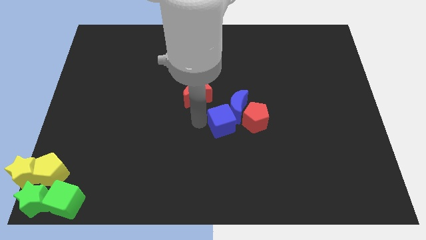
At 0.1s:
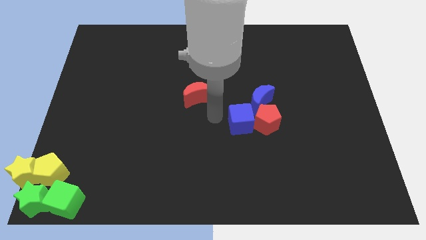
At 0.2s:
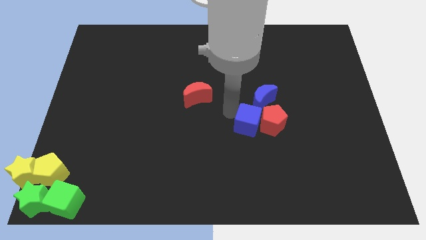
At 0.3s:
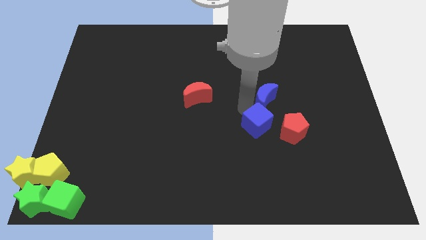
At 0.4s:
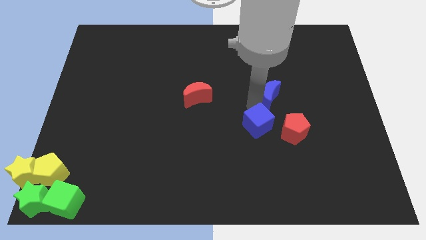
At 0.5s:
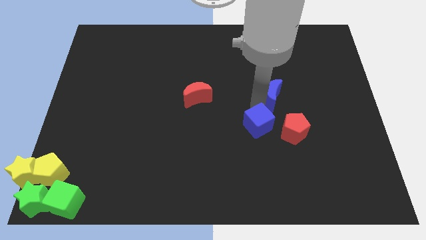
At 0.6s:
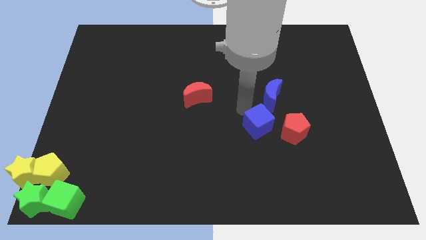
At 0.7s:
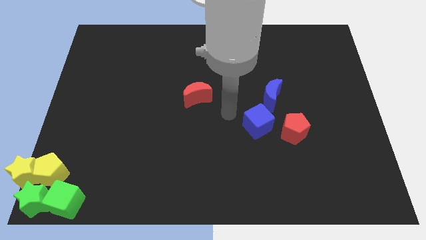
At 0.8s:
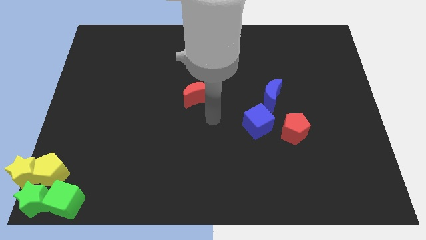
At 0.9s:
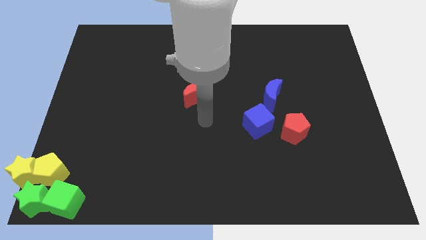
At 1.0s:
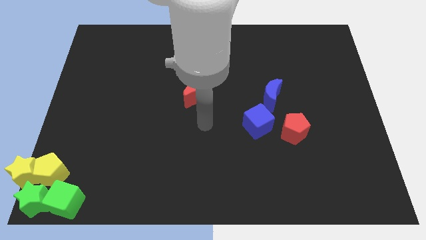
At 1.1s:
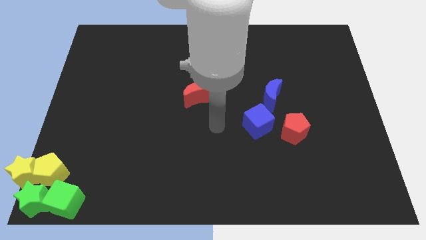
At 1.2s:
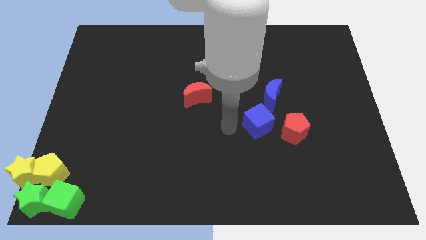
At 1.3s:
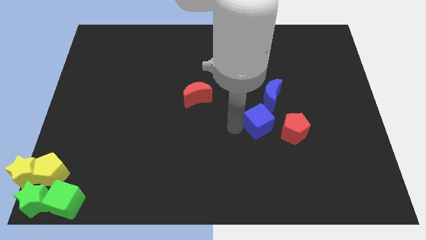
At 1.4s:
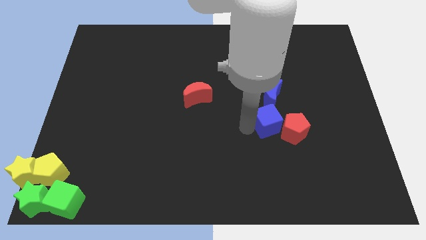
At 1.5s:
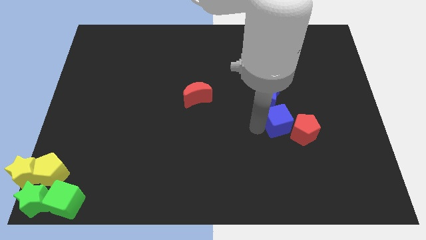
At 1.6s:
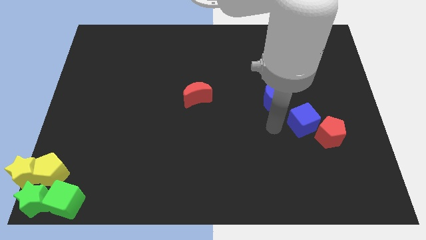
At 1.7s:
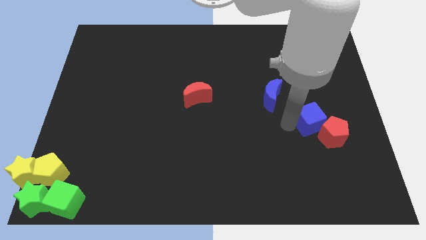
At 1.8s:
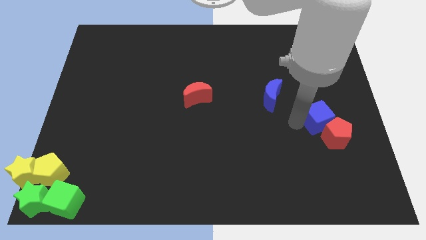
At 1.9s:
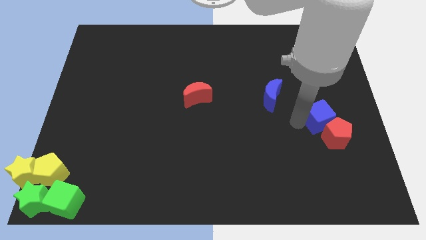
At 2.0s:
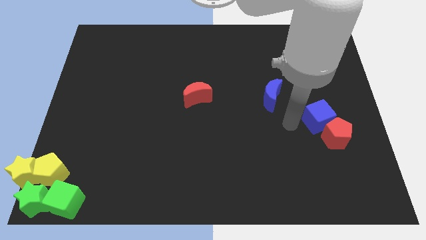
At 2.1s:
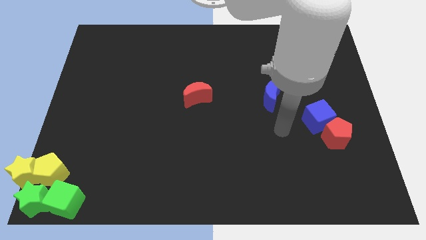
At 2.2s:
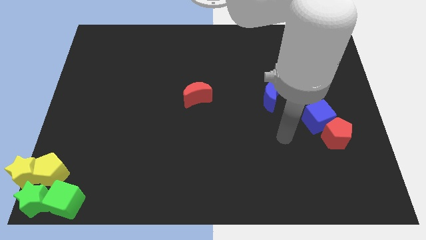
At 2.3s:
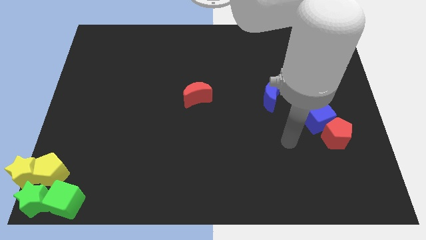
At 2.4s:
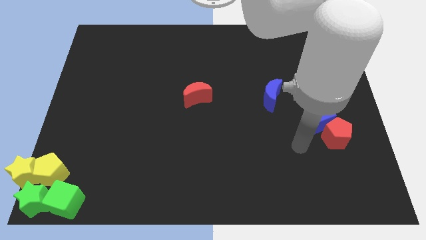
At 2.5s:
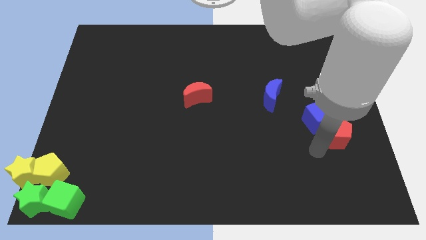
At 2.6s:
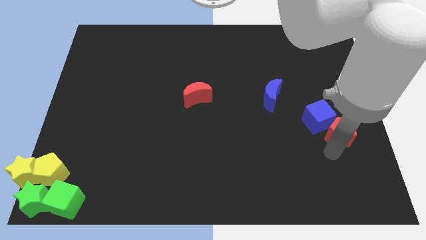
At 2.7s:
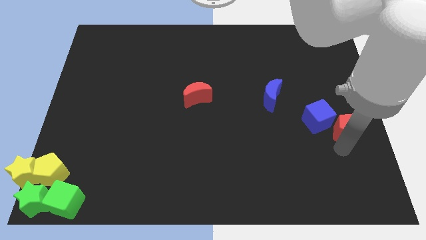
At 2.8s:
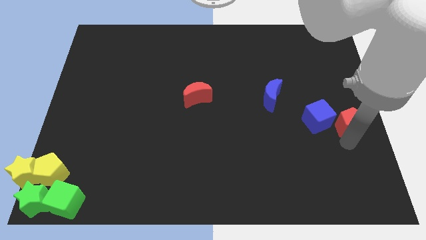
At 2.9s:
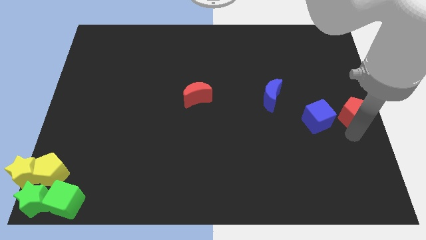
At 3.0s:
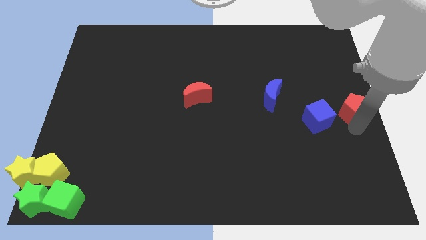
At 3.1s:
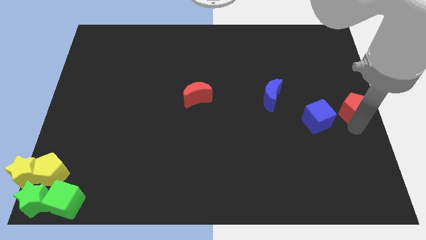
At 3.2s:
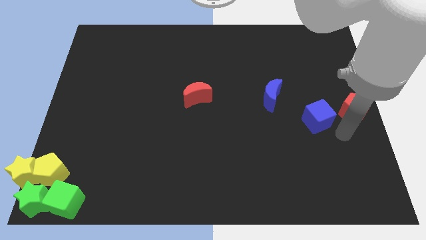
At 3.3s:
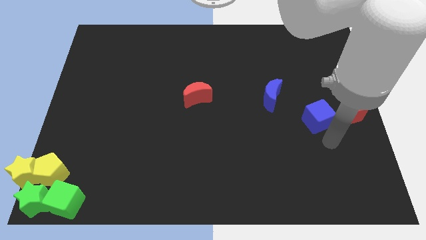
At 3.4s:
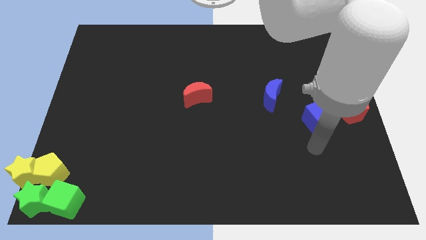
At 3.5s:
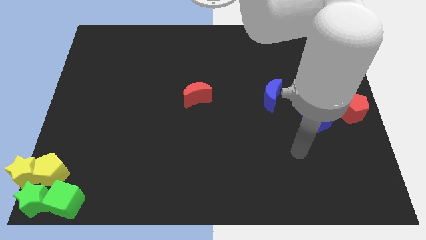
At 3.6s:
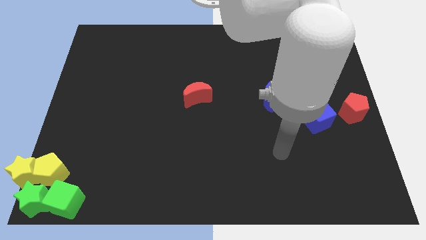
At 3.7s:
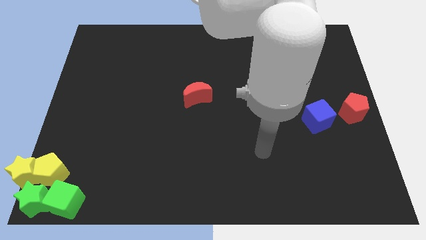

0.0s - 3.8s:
push the blue cube with red pentagon together towards center right

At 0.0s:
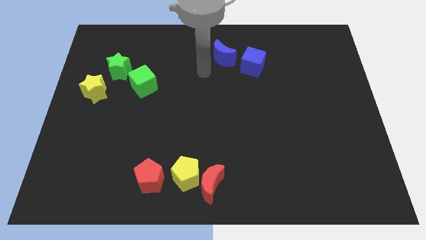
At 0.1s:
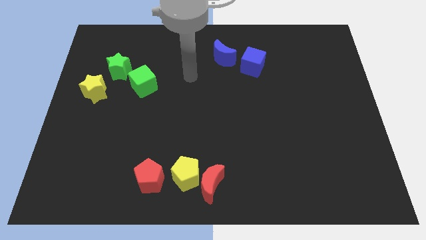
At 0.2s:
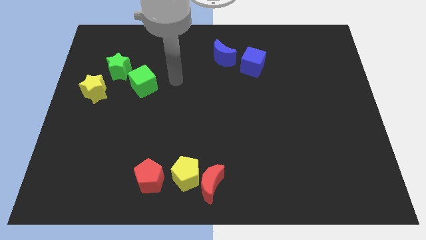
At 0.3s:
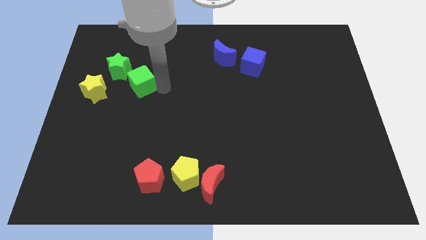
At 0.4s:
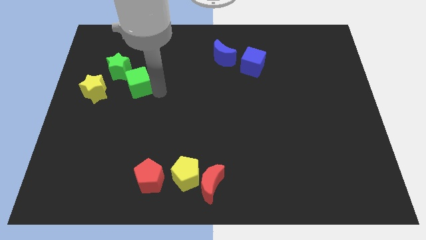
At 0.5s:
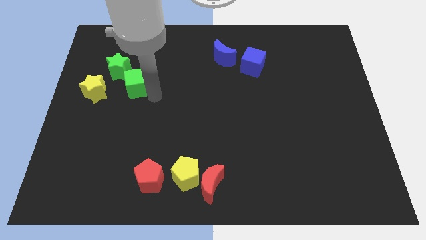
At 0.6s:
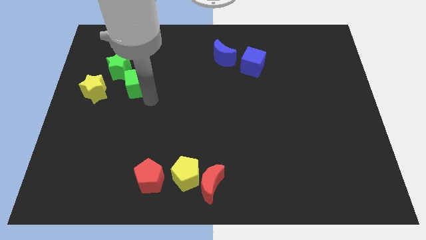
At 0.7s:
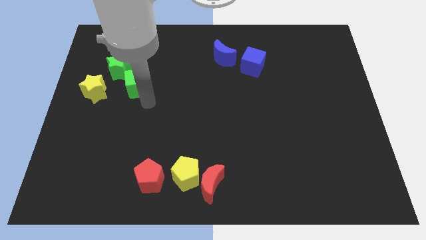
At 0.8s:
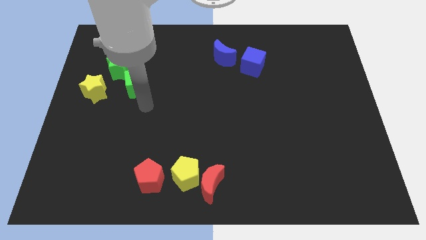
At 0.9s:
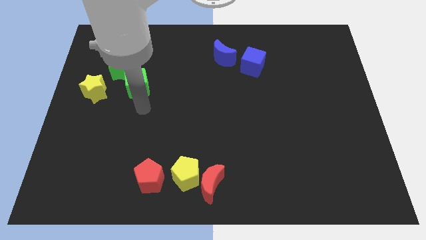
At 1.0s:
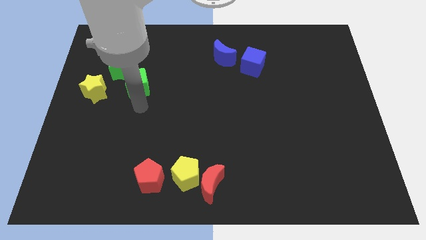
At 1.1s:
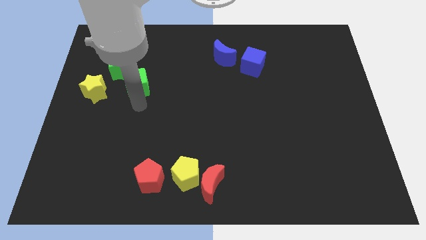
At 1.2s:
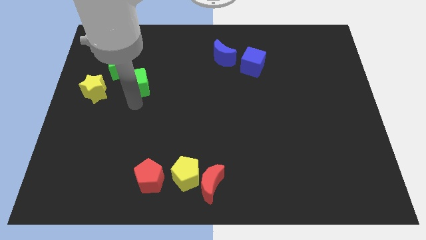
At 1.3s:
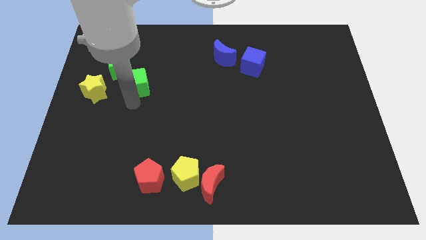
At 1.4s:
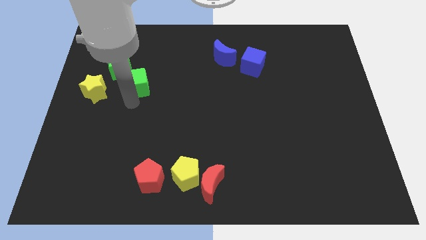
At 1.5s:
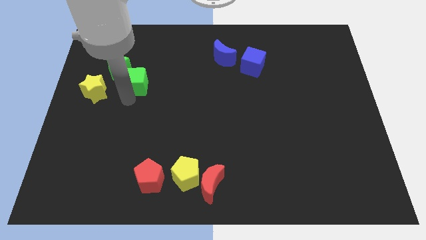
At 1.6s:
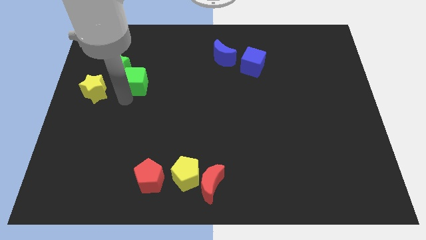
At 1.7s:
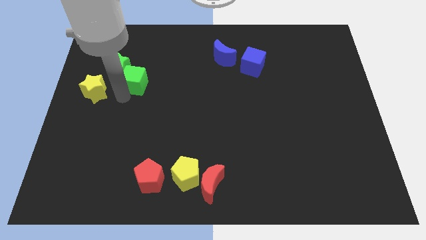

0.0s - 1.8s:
move the green cube into the green star

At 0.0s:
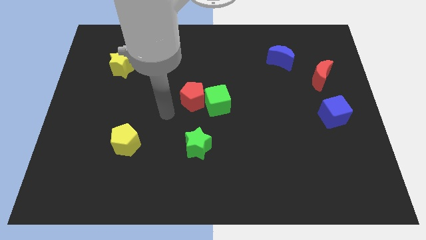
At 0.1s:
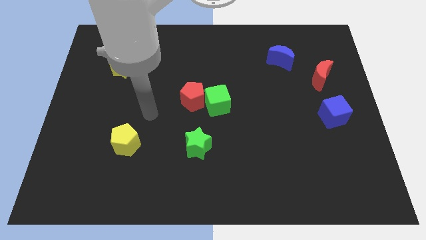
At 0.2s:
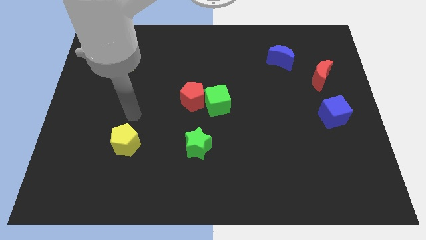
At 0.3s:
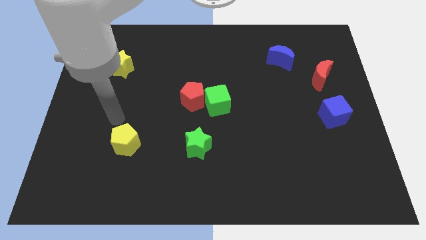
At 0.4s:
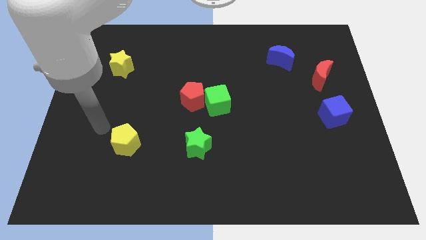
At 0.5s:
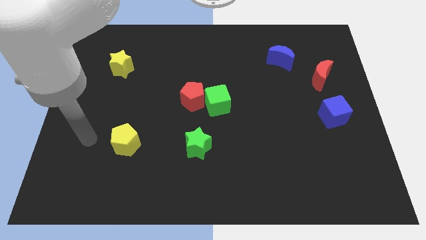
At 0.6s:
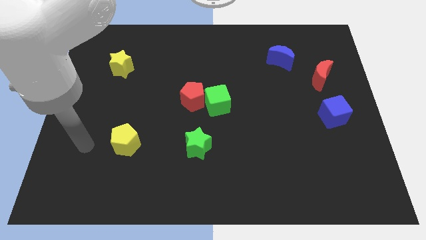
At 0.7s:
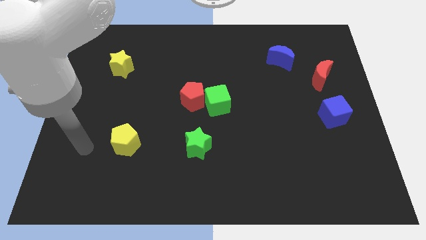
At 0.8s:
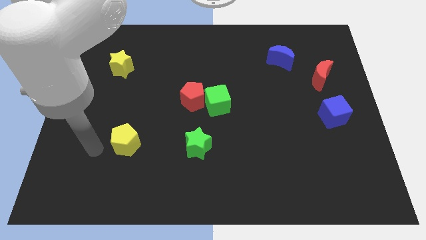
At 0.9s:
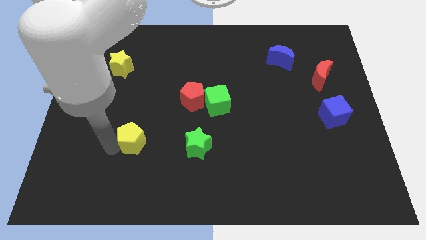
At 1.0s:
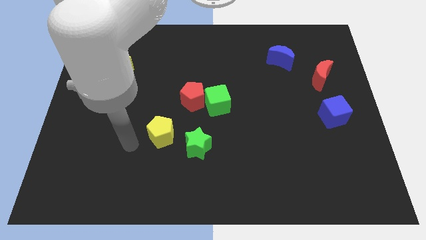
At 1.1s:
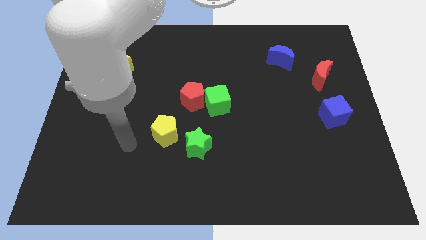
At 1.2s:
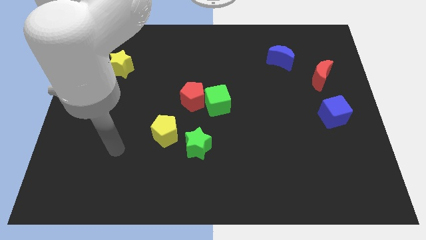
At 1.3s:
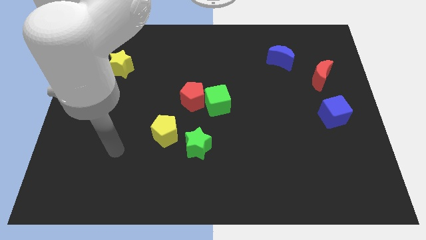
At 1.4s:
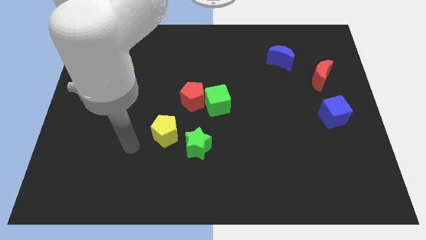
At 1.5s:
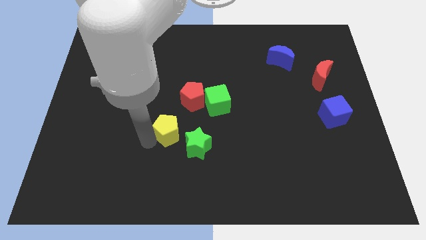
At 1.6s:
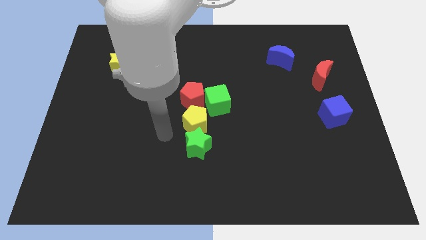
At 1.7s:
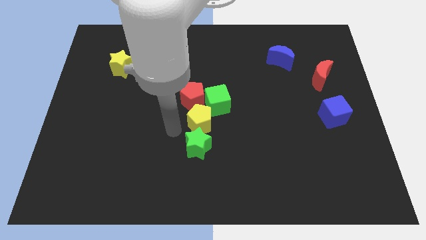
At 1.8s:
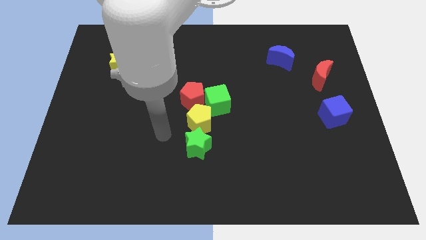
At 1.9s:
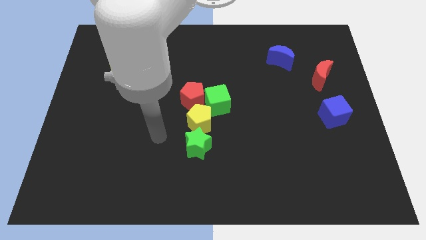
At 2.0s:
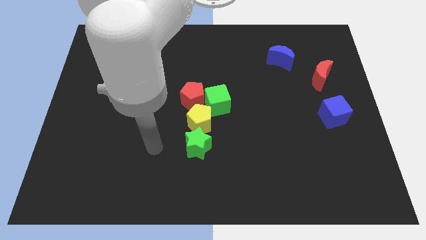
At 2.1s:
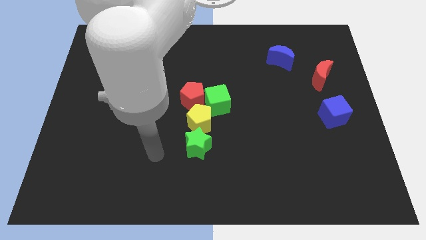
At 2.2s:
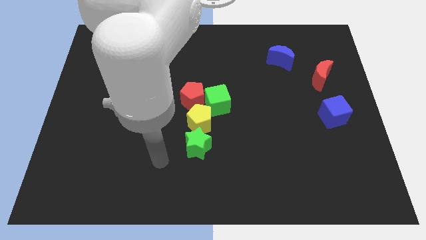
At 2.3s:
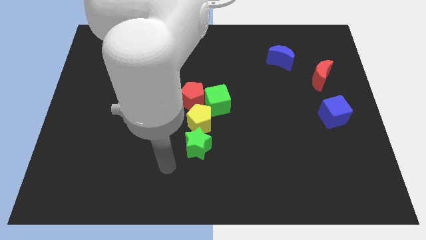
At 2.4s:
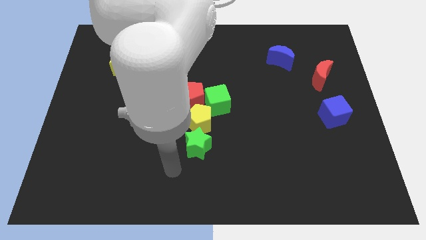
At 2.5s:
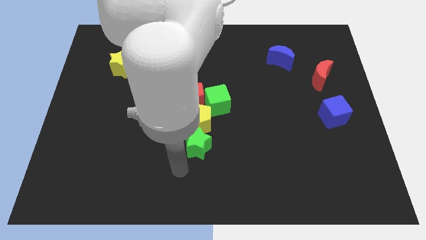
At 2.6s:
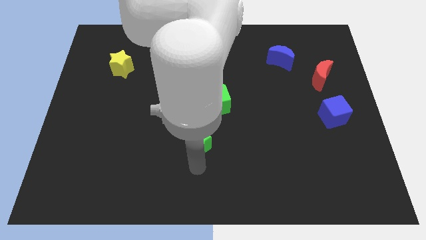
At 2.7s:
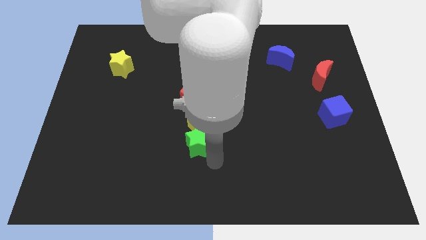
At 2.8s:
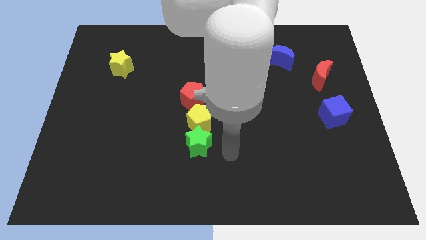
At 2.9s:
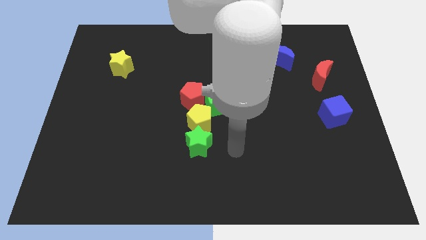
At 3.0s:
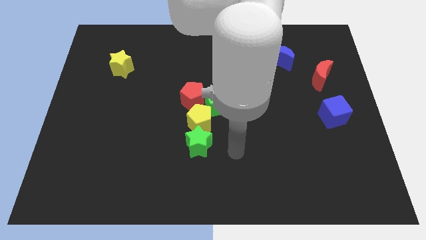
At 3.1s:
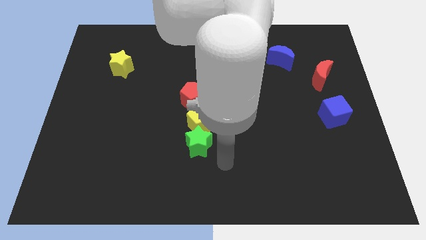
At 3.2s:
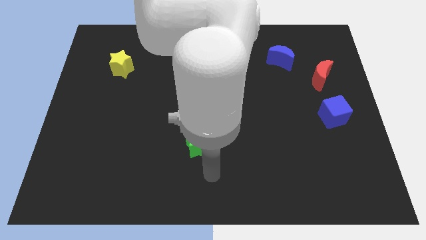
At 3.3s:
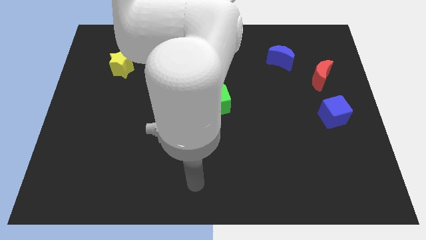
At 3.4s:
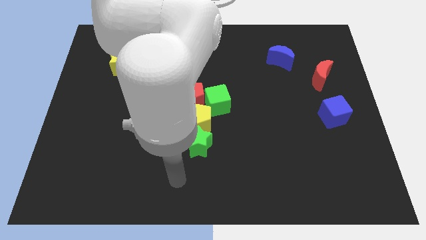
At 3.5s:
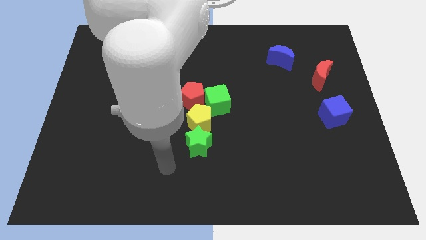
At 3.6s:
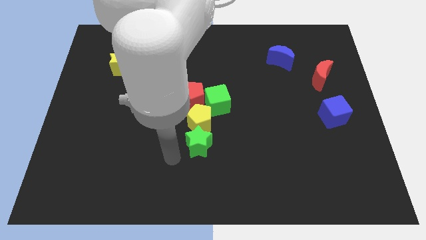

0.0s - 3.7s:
push the yellow pentagon to the center of the board
